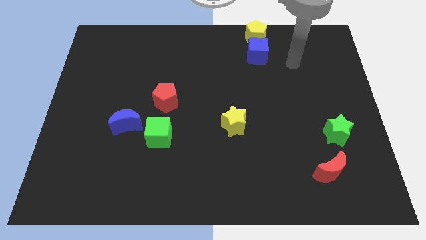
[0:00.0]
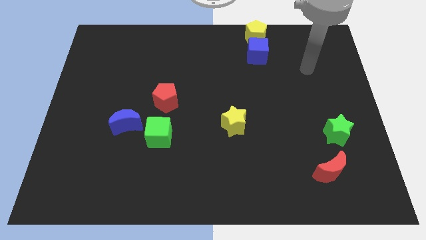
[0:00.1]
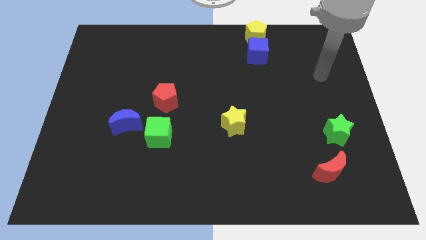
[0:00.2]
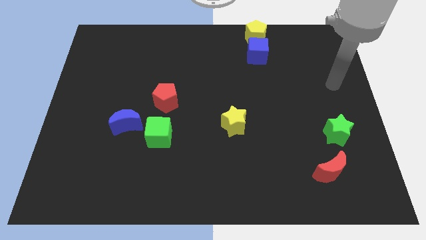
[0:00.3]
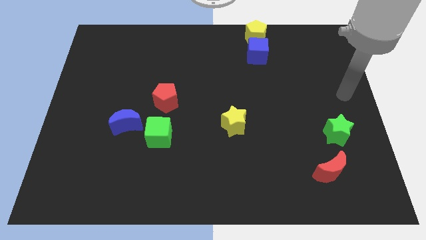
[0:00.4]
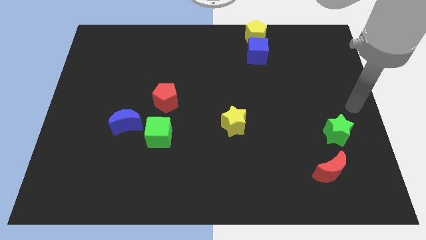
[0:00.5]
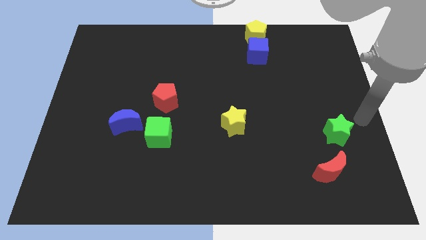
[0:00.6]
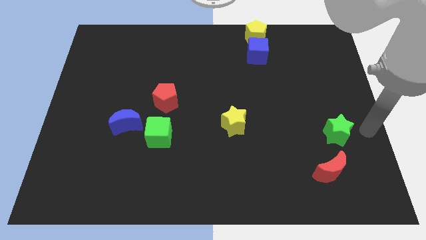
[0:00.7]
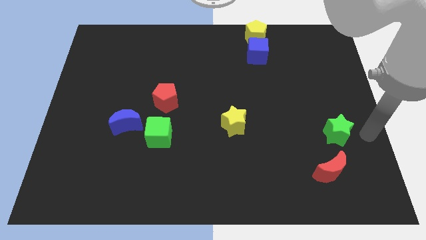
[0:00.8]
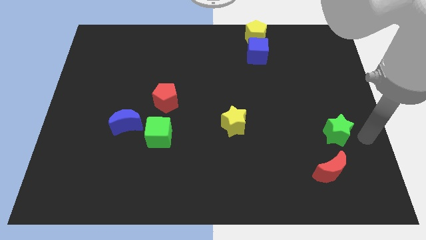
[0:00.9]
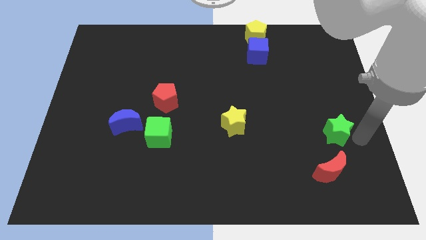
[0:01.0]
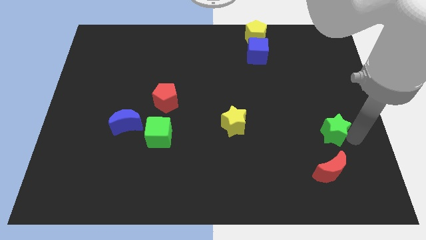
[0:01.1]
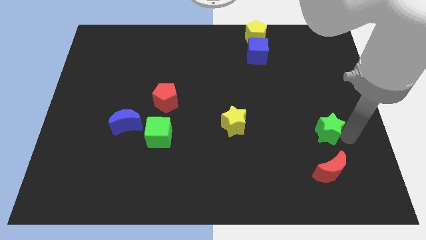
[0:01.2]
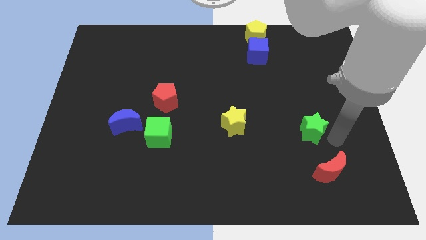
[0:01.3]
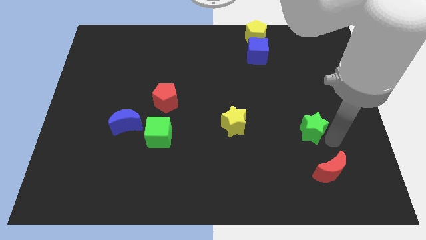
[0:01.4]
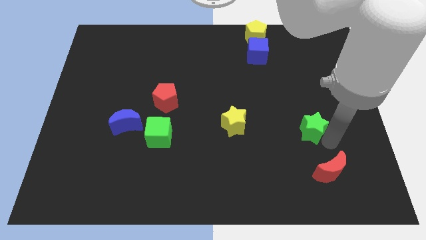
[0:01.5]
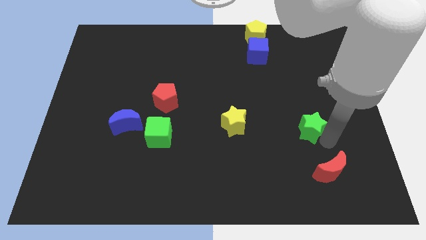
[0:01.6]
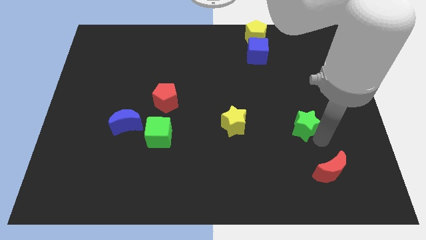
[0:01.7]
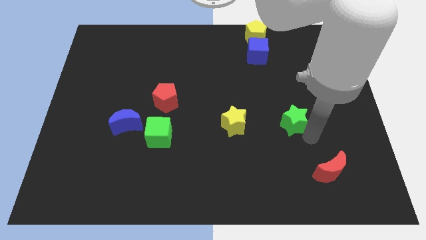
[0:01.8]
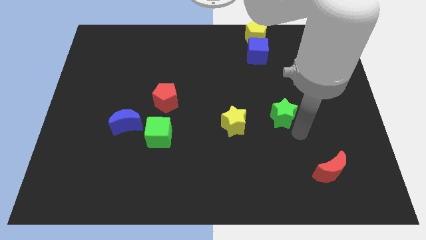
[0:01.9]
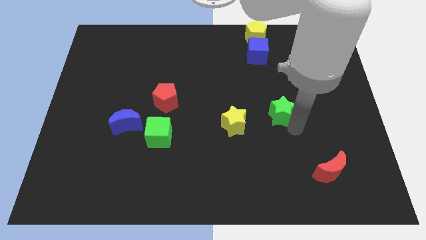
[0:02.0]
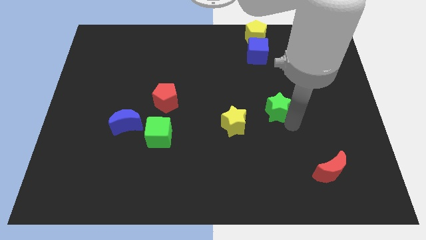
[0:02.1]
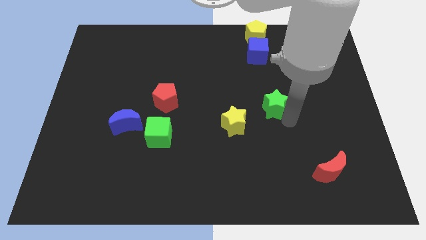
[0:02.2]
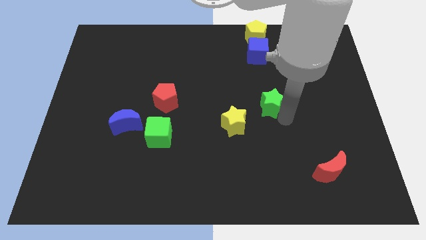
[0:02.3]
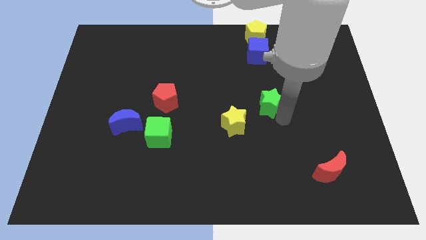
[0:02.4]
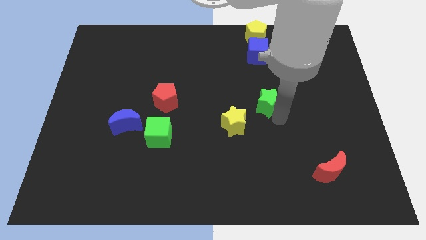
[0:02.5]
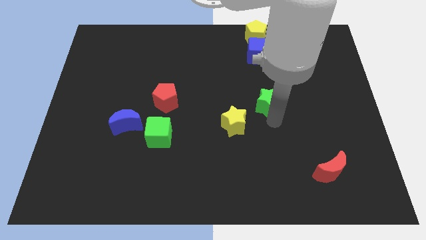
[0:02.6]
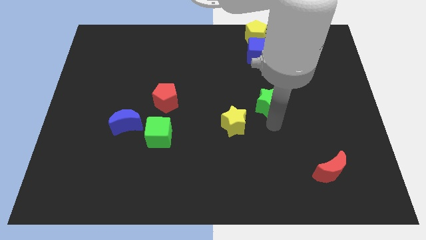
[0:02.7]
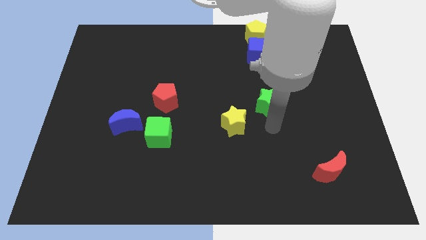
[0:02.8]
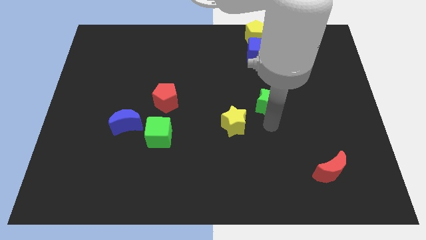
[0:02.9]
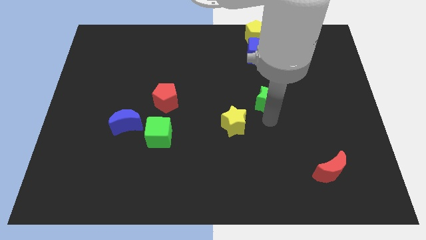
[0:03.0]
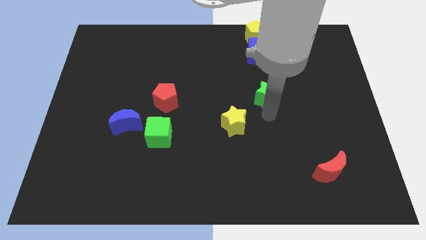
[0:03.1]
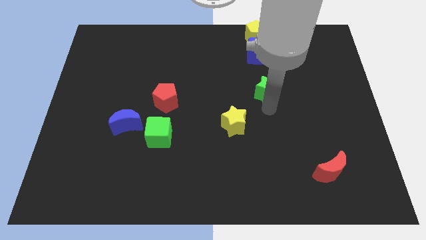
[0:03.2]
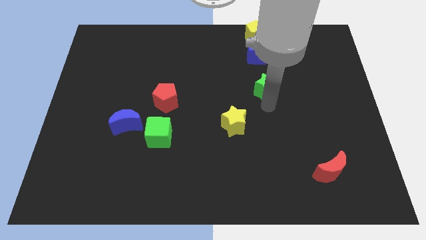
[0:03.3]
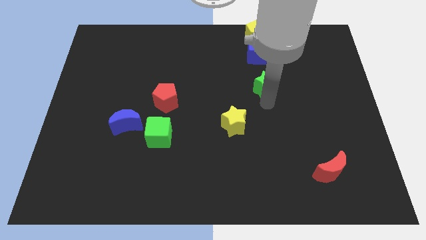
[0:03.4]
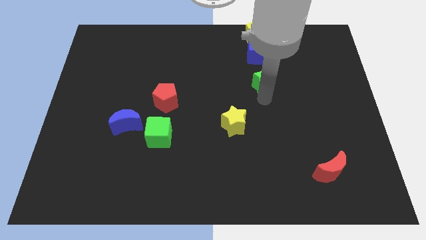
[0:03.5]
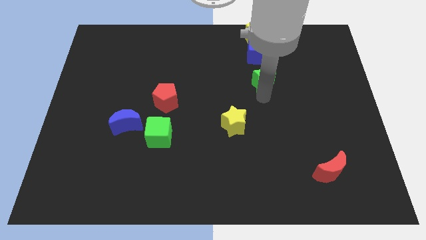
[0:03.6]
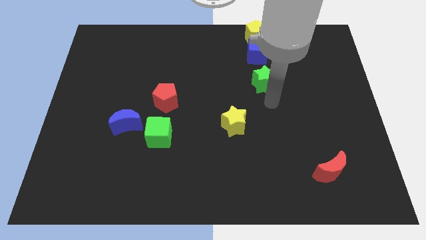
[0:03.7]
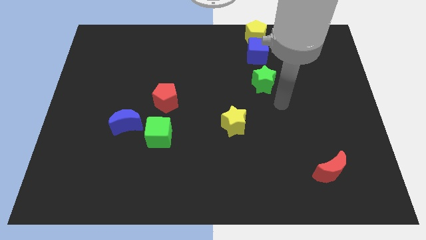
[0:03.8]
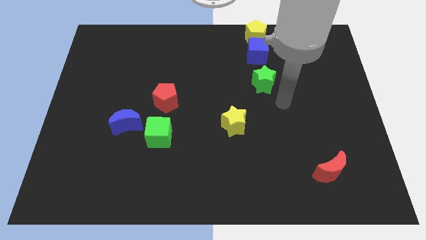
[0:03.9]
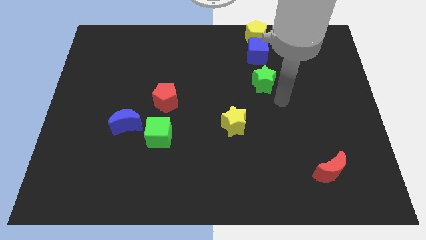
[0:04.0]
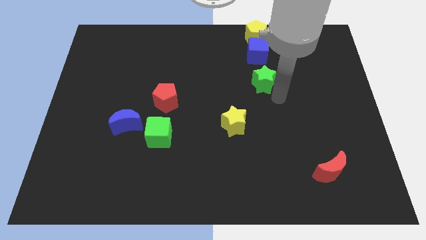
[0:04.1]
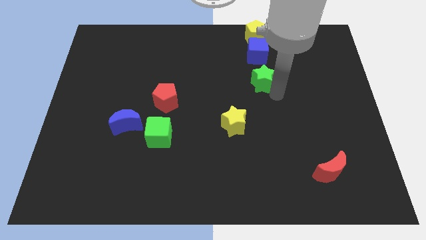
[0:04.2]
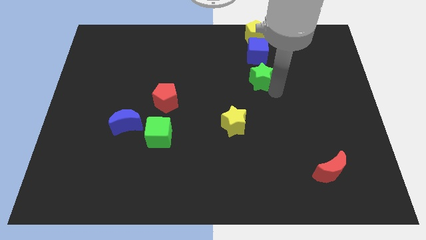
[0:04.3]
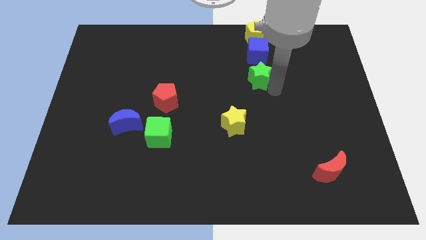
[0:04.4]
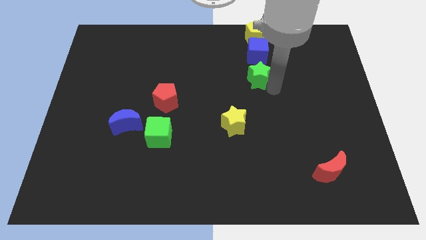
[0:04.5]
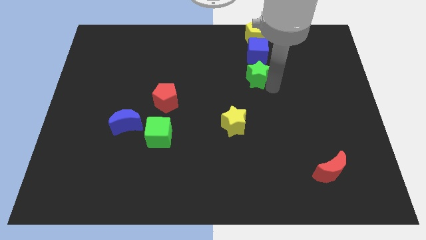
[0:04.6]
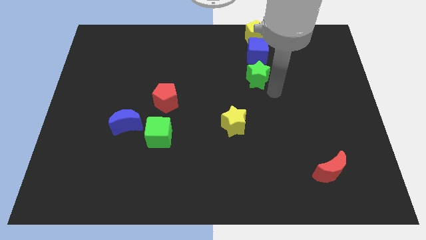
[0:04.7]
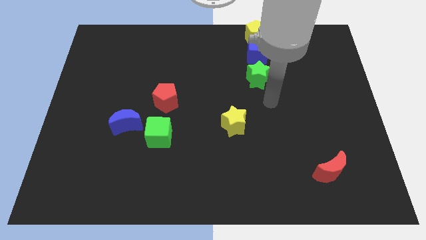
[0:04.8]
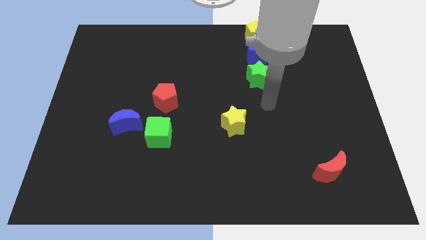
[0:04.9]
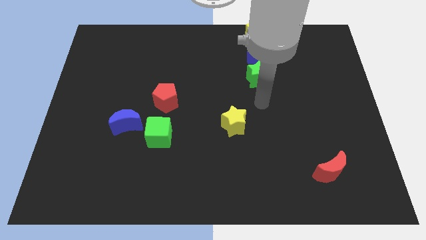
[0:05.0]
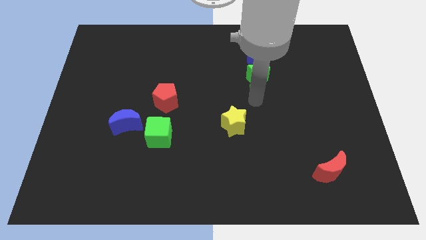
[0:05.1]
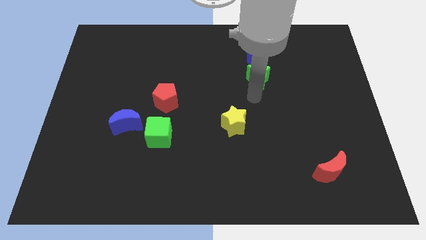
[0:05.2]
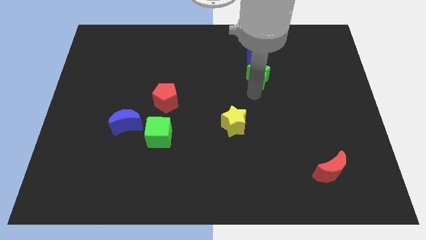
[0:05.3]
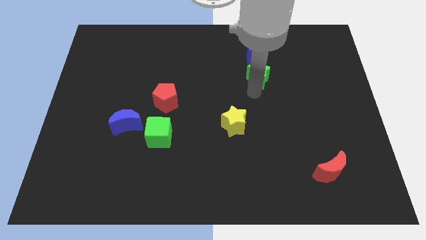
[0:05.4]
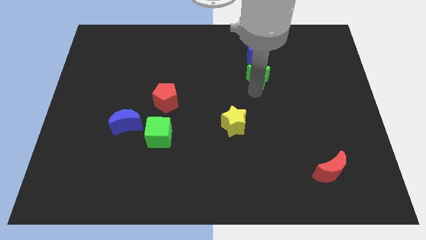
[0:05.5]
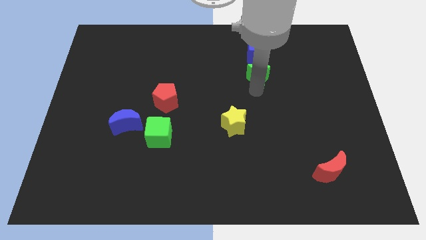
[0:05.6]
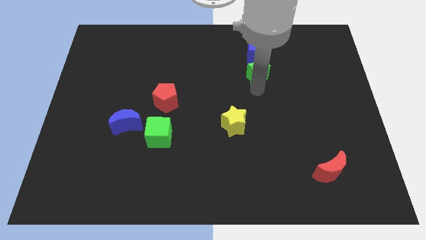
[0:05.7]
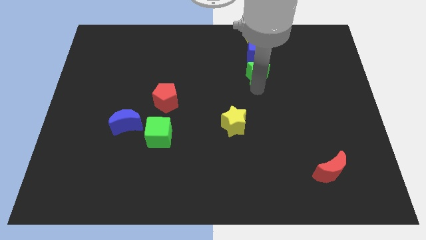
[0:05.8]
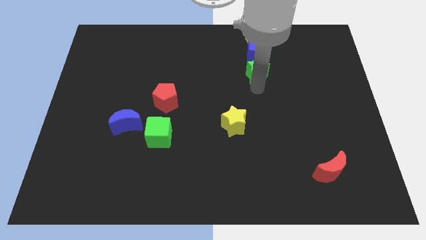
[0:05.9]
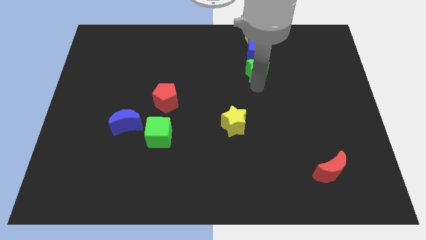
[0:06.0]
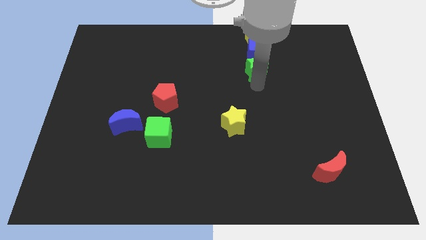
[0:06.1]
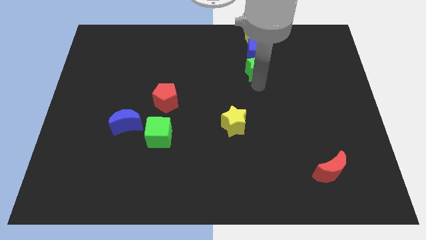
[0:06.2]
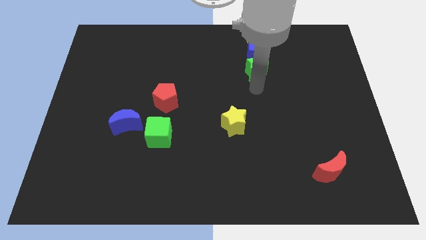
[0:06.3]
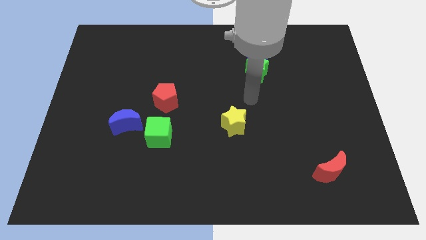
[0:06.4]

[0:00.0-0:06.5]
place the green star underneath the blue cube

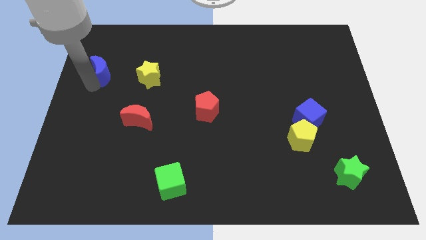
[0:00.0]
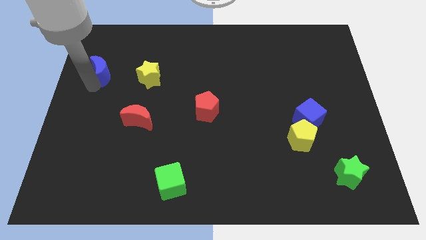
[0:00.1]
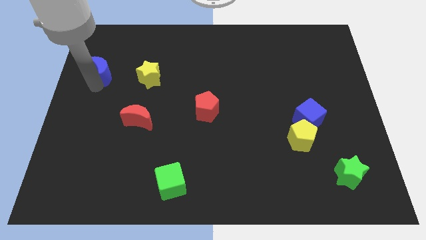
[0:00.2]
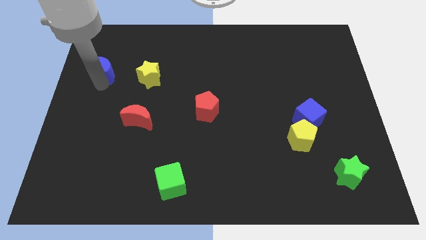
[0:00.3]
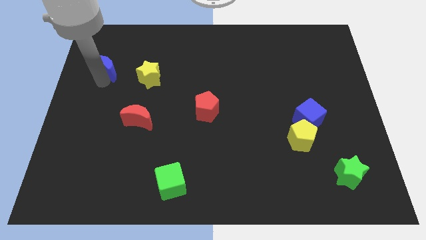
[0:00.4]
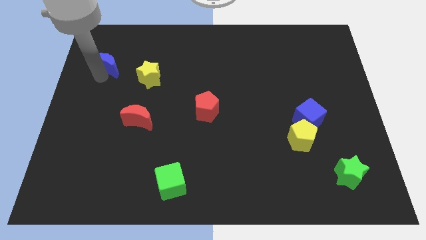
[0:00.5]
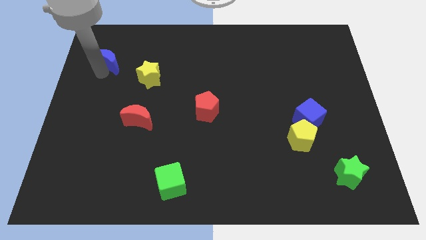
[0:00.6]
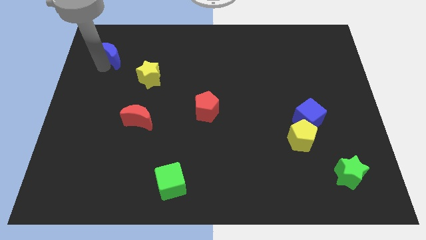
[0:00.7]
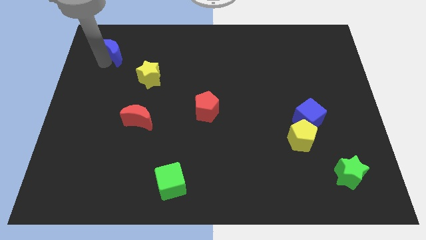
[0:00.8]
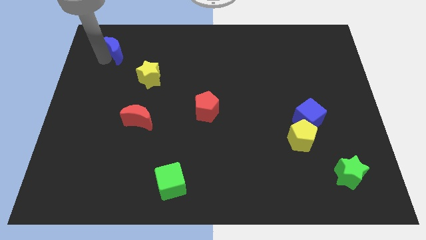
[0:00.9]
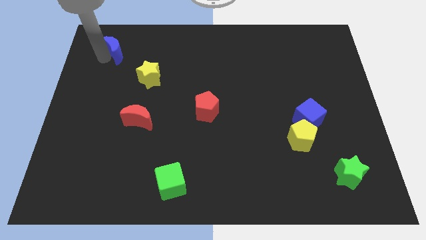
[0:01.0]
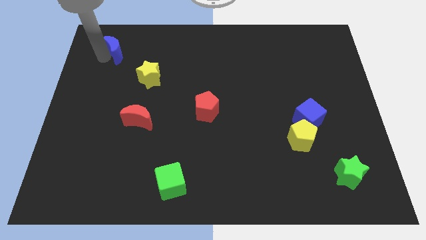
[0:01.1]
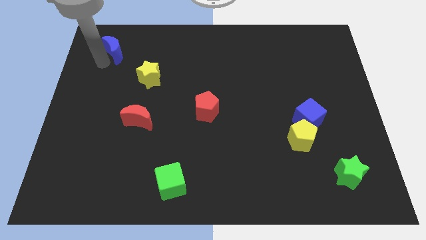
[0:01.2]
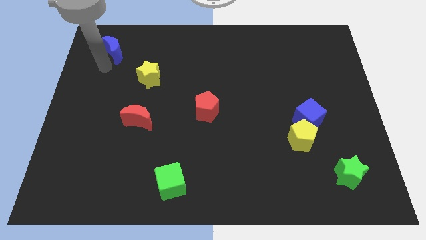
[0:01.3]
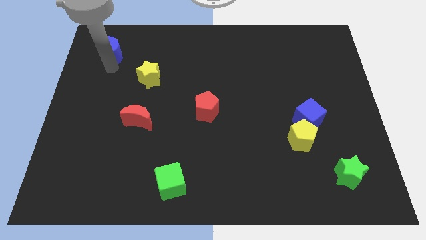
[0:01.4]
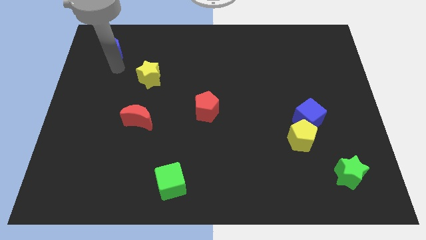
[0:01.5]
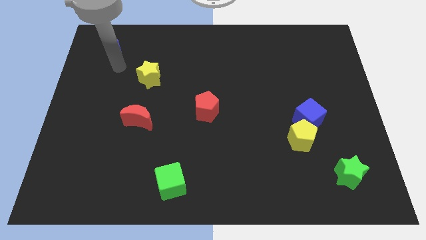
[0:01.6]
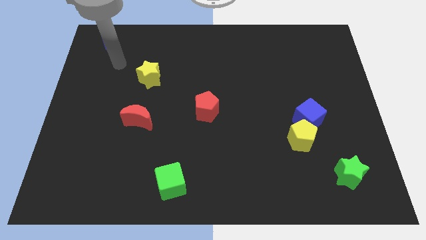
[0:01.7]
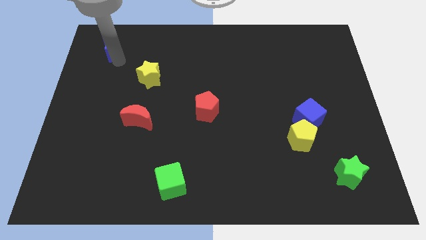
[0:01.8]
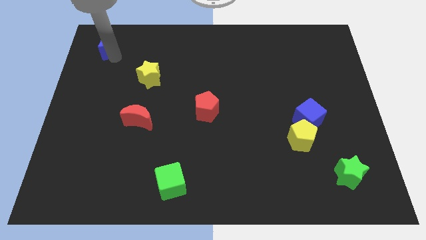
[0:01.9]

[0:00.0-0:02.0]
push the blue crescent to the top left of the yellow star

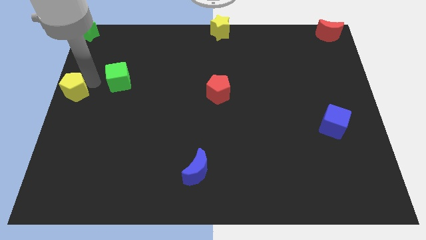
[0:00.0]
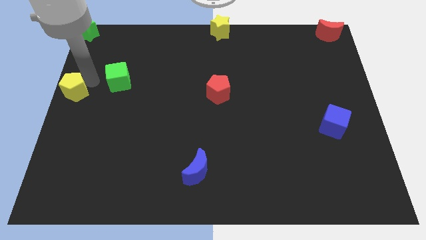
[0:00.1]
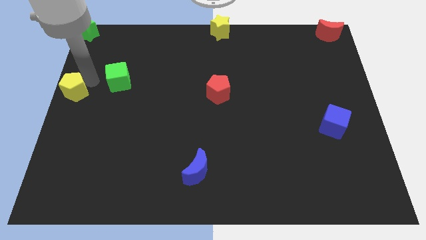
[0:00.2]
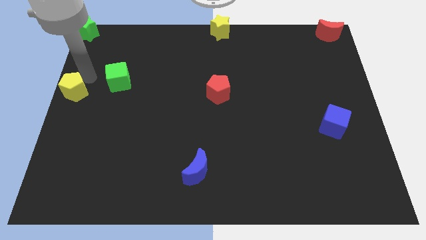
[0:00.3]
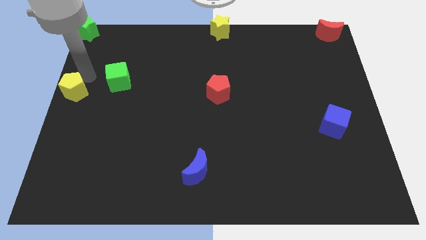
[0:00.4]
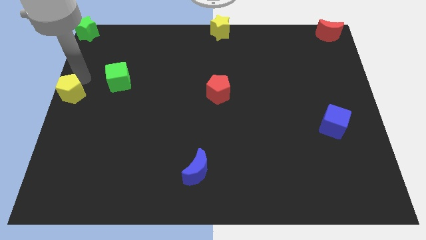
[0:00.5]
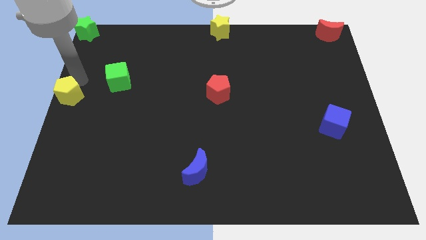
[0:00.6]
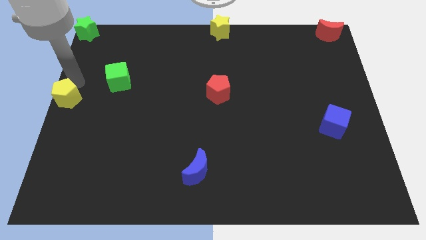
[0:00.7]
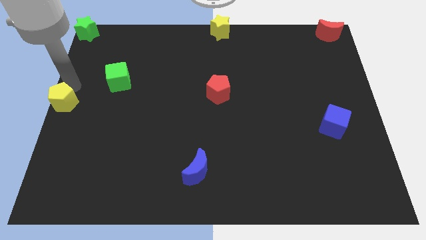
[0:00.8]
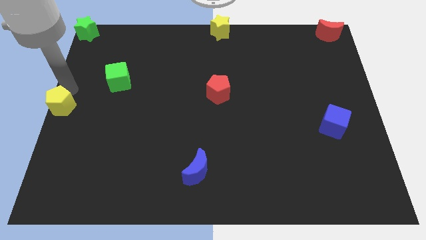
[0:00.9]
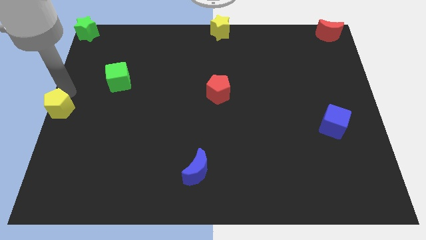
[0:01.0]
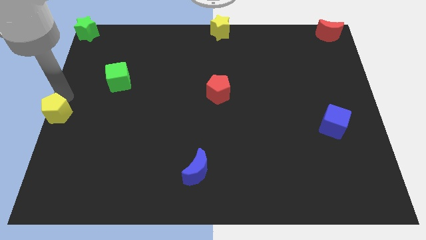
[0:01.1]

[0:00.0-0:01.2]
move the yellow pentagon to the left center of the board
